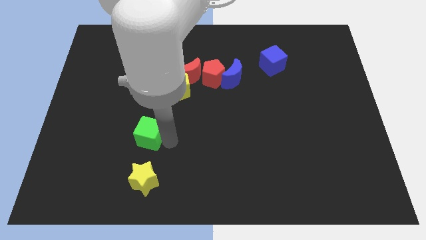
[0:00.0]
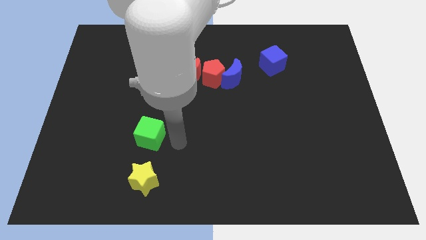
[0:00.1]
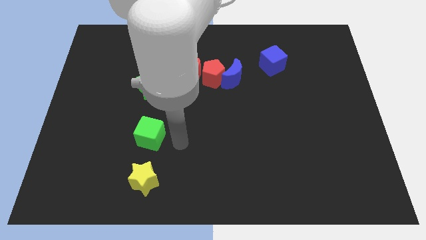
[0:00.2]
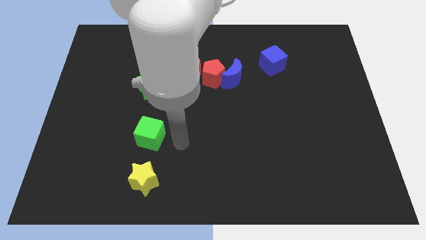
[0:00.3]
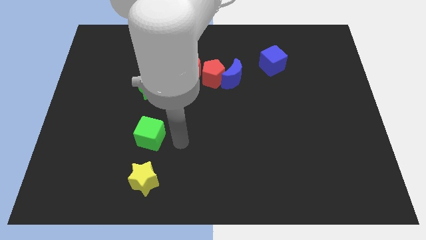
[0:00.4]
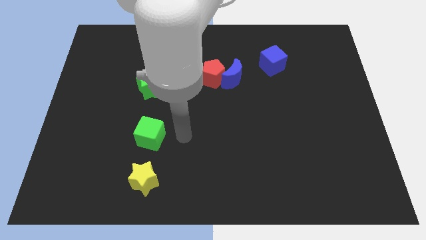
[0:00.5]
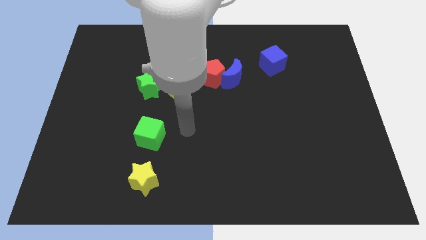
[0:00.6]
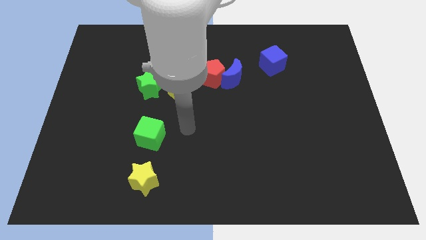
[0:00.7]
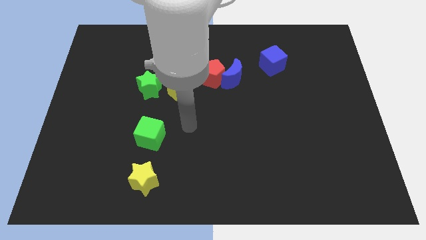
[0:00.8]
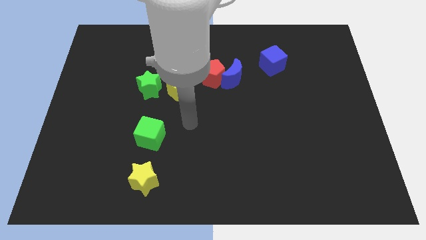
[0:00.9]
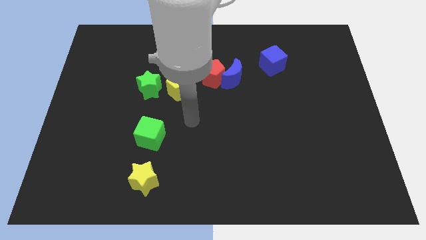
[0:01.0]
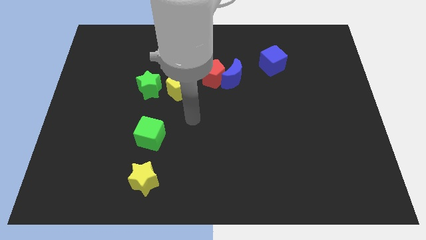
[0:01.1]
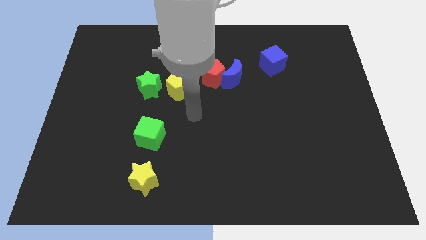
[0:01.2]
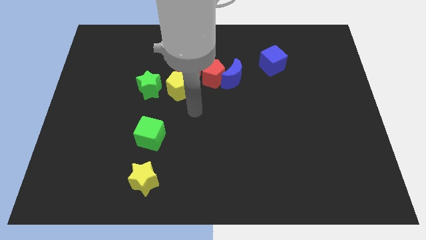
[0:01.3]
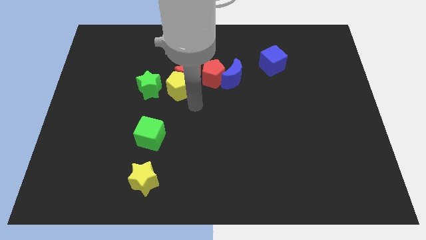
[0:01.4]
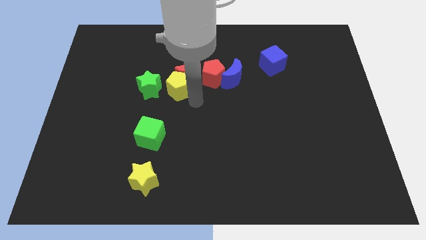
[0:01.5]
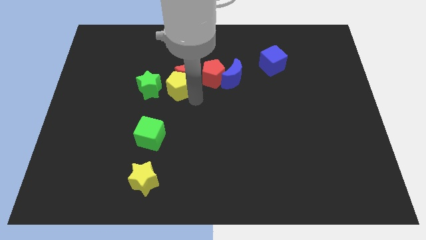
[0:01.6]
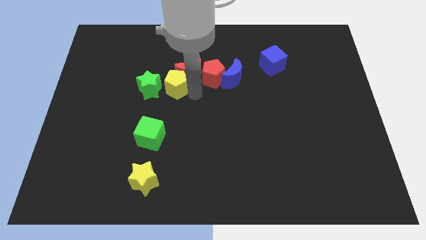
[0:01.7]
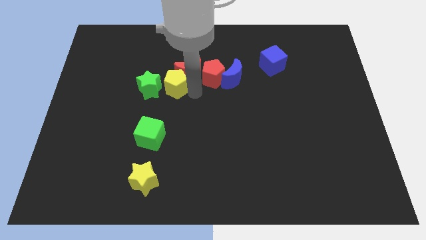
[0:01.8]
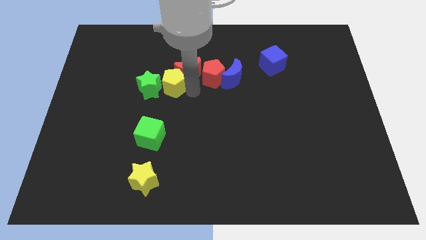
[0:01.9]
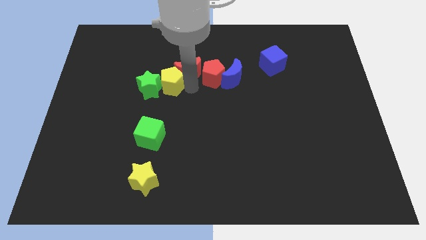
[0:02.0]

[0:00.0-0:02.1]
move your arm away from the green cube

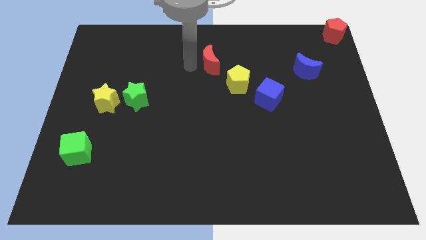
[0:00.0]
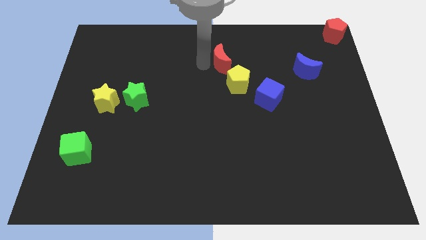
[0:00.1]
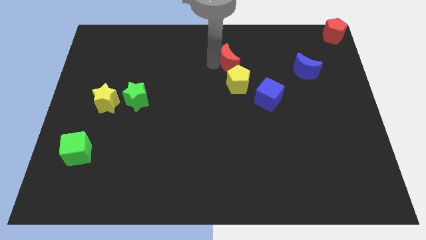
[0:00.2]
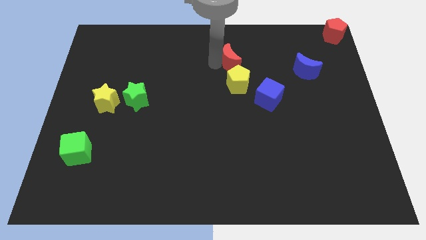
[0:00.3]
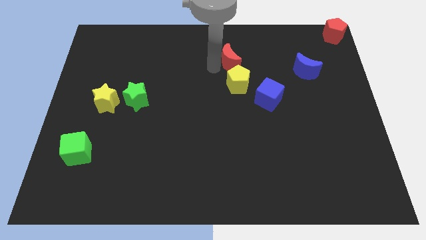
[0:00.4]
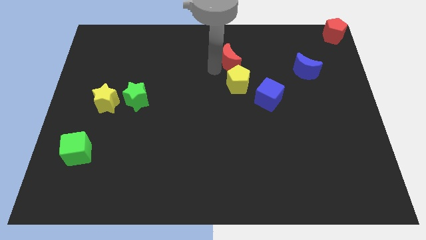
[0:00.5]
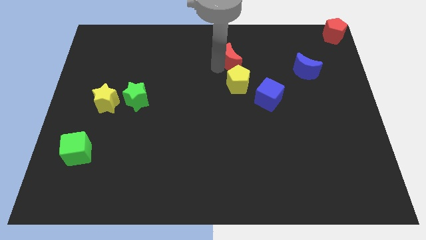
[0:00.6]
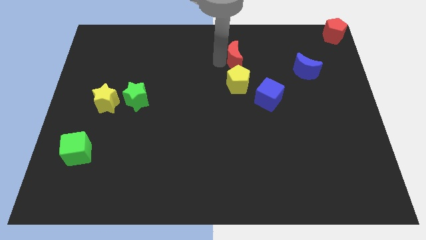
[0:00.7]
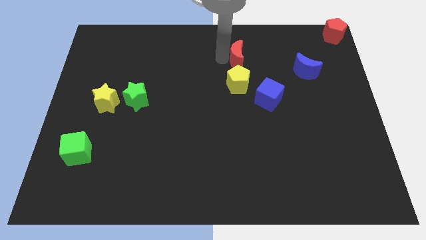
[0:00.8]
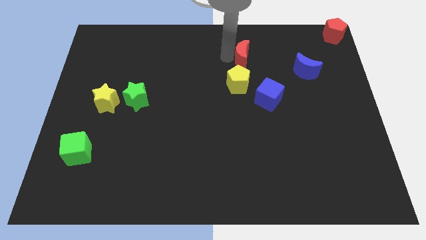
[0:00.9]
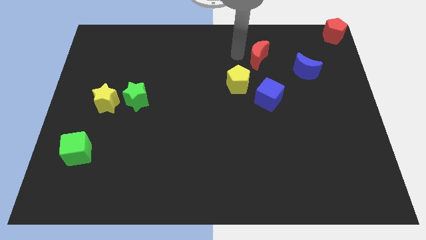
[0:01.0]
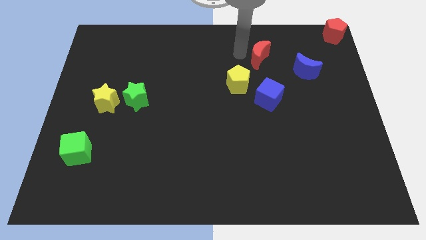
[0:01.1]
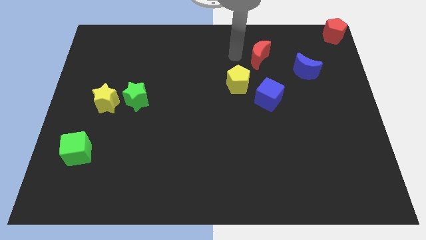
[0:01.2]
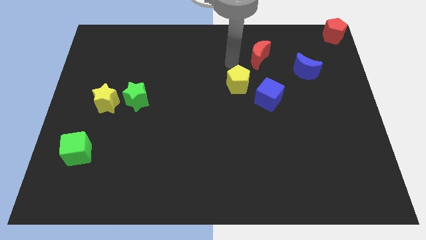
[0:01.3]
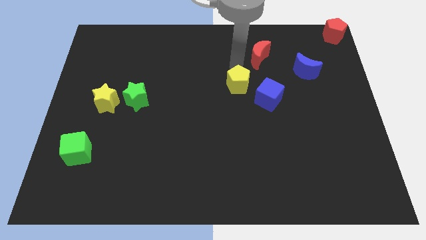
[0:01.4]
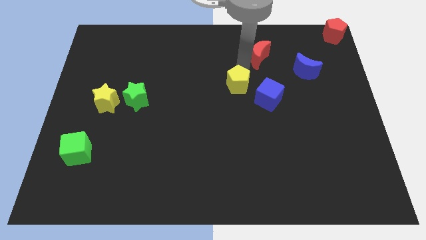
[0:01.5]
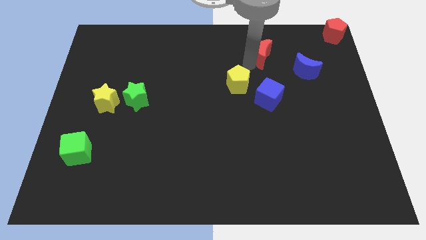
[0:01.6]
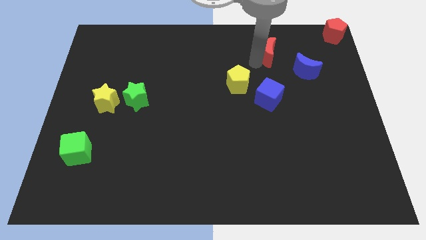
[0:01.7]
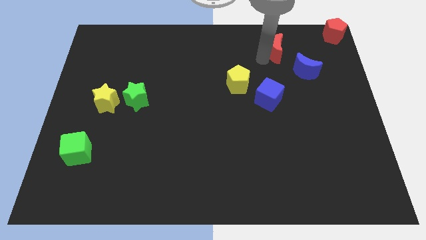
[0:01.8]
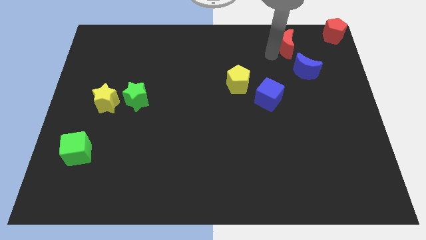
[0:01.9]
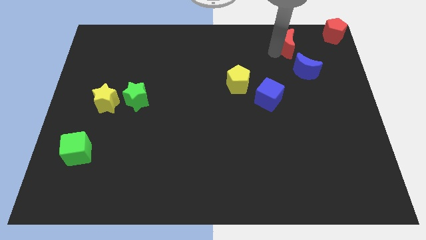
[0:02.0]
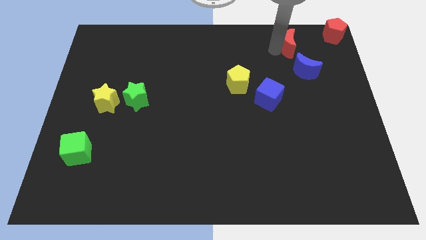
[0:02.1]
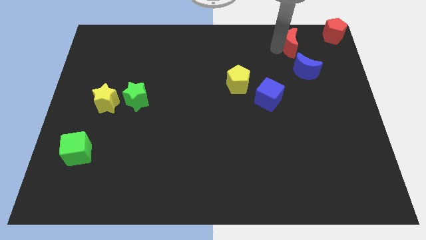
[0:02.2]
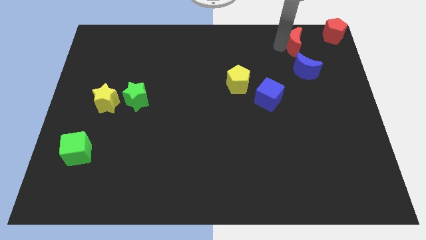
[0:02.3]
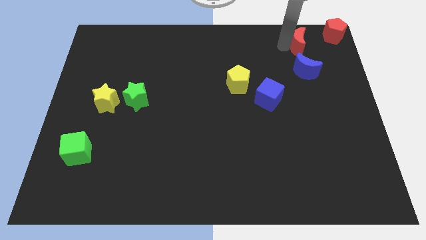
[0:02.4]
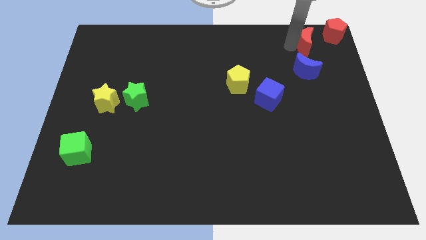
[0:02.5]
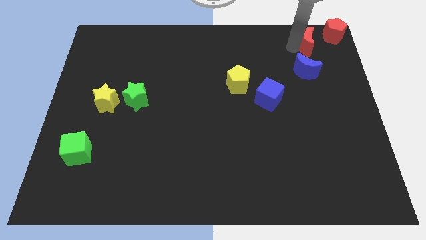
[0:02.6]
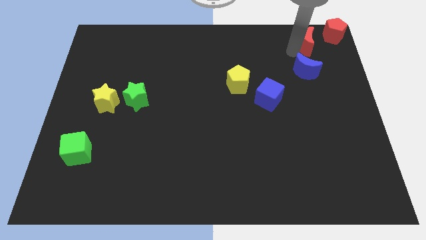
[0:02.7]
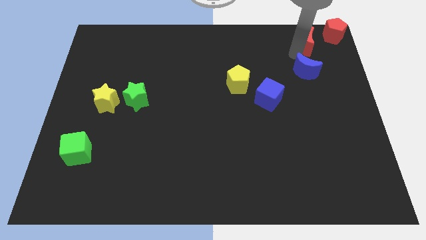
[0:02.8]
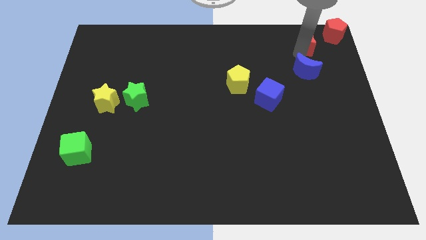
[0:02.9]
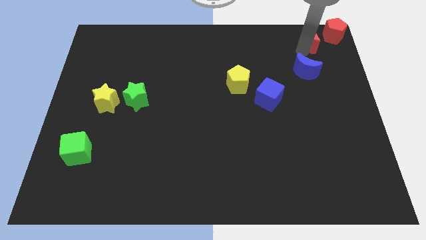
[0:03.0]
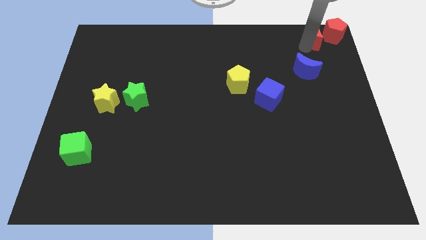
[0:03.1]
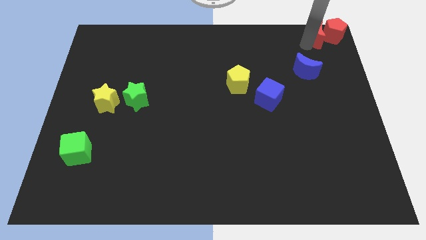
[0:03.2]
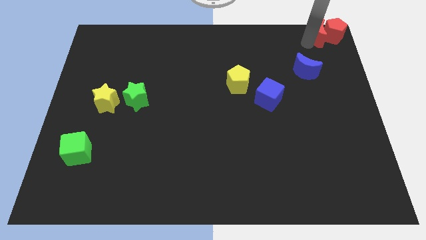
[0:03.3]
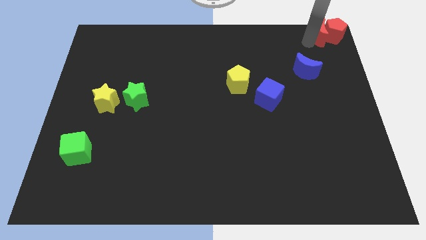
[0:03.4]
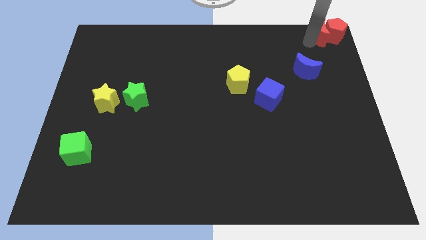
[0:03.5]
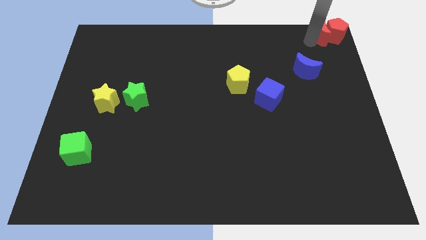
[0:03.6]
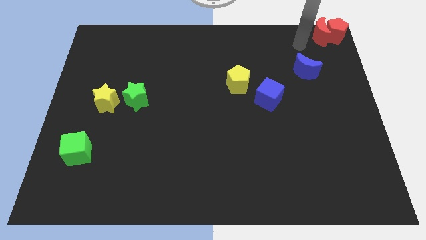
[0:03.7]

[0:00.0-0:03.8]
push red moon in to red pentagon

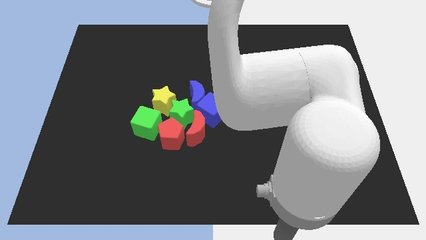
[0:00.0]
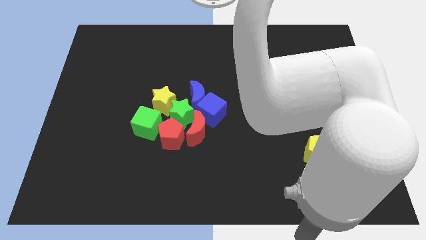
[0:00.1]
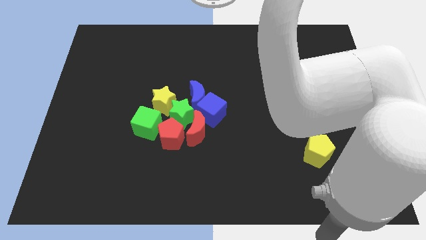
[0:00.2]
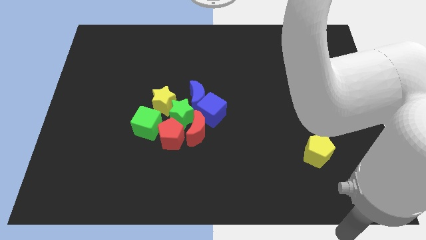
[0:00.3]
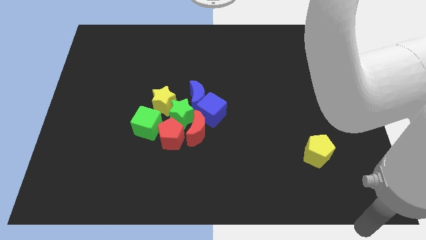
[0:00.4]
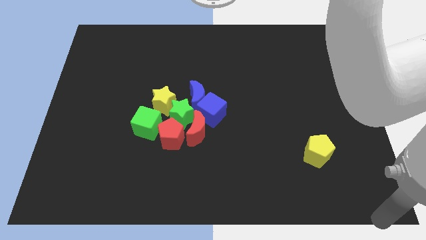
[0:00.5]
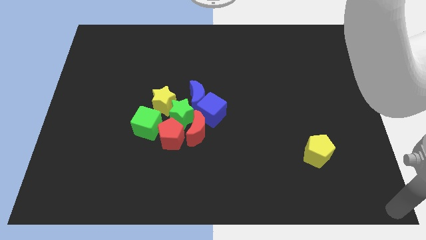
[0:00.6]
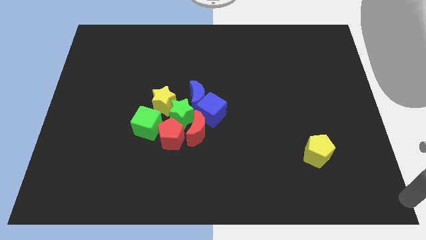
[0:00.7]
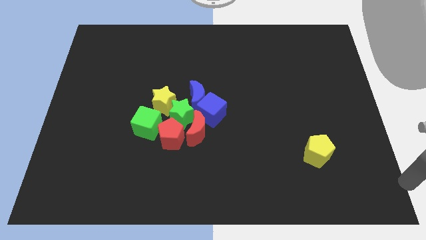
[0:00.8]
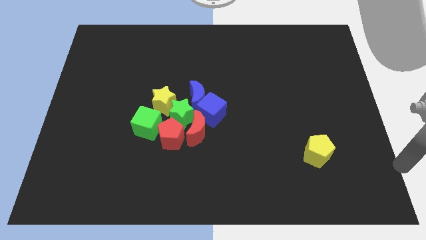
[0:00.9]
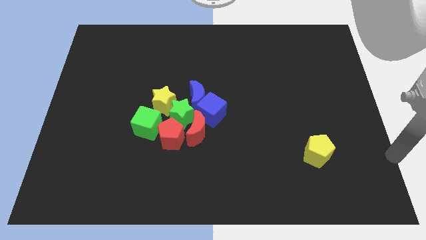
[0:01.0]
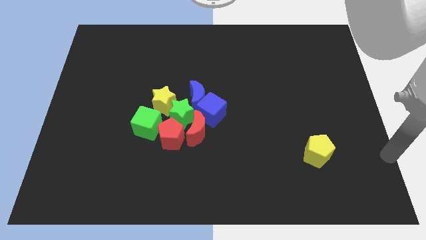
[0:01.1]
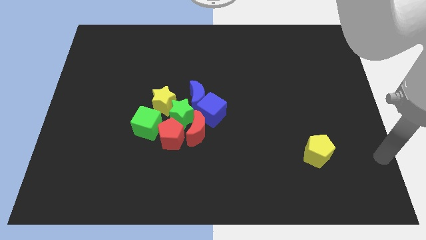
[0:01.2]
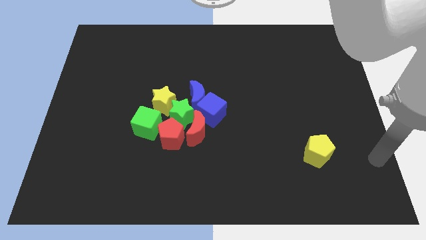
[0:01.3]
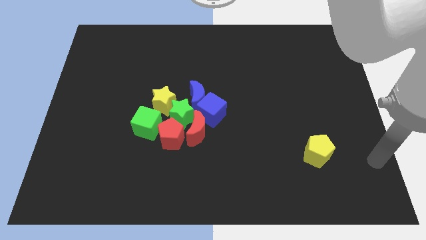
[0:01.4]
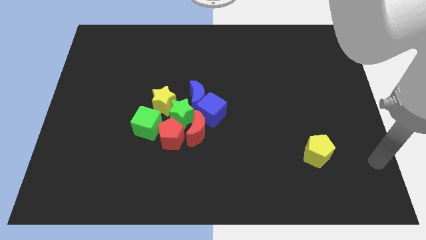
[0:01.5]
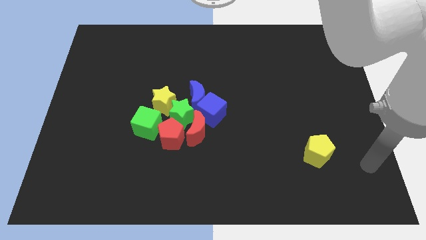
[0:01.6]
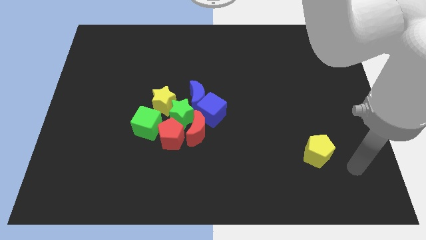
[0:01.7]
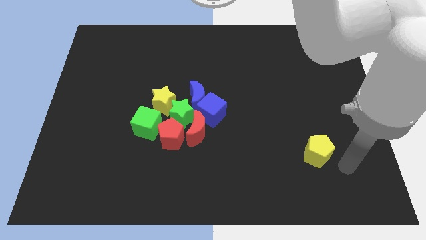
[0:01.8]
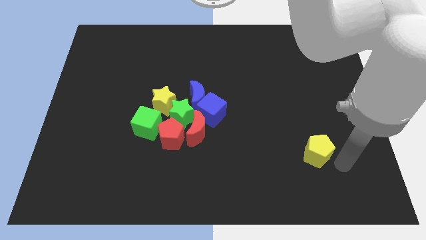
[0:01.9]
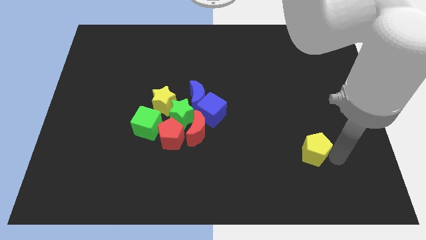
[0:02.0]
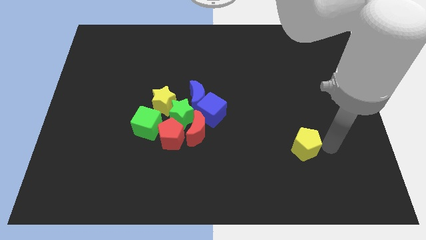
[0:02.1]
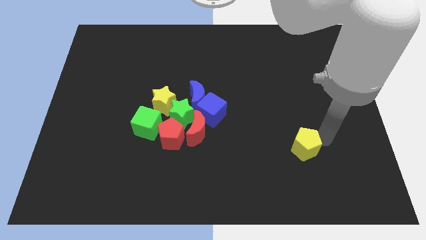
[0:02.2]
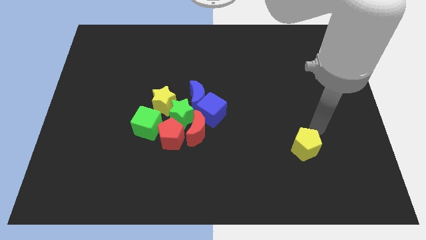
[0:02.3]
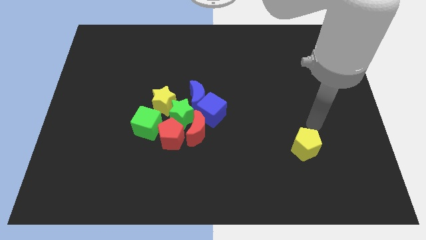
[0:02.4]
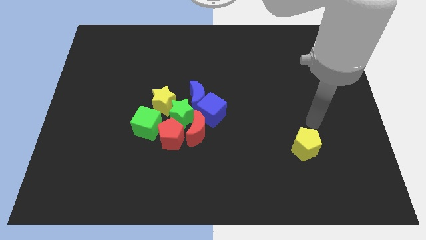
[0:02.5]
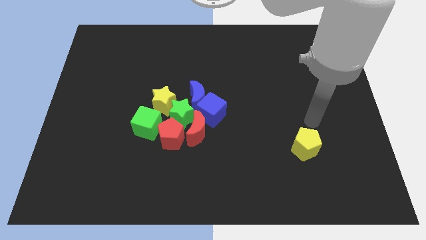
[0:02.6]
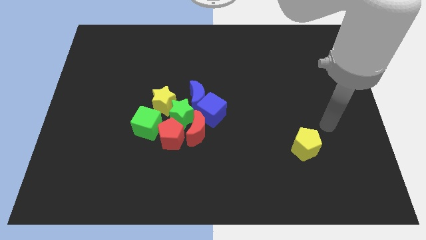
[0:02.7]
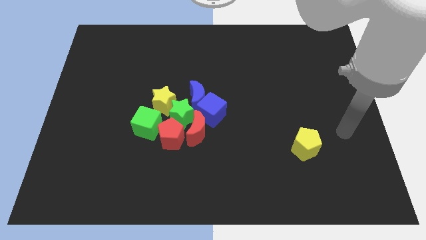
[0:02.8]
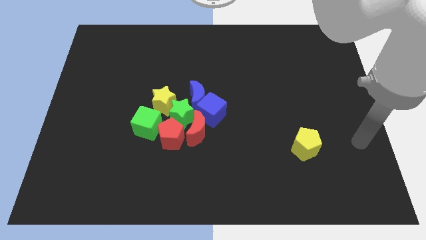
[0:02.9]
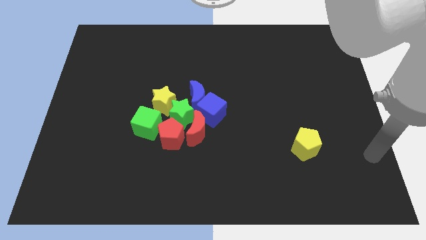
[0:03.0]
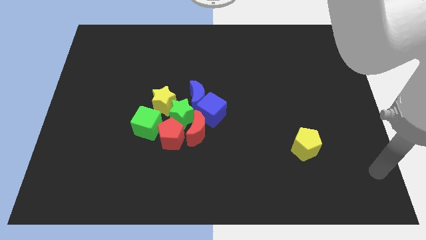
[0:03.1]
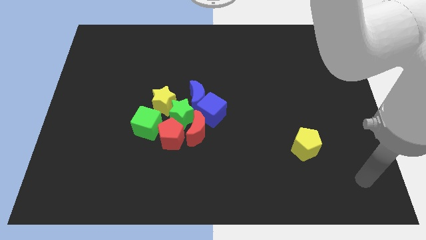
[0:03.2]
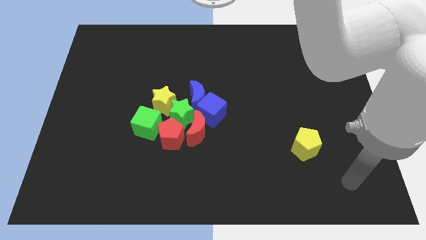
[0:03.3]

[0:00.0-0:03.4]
push the yellow star to the center
